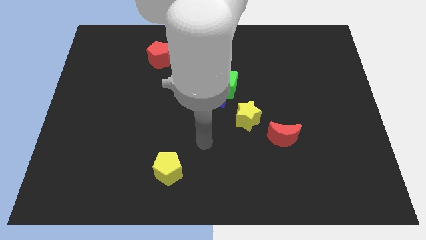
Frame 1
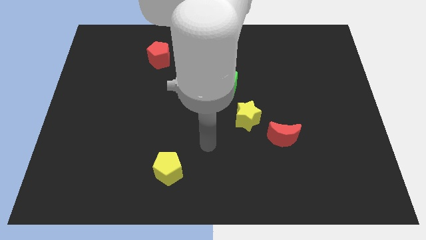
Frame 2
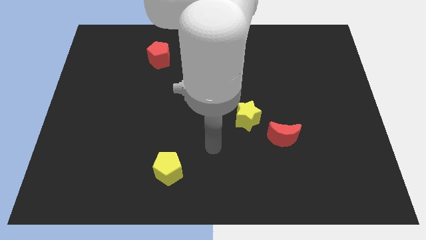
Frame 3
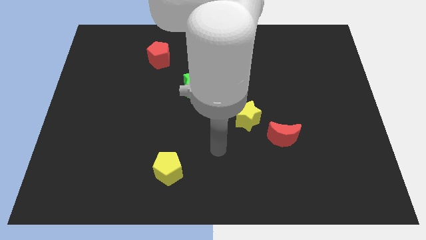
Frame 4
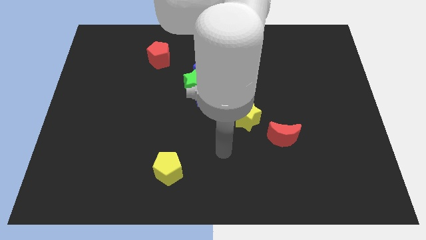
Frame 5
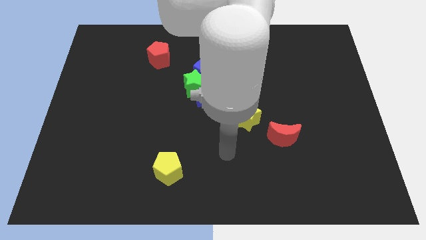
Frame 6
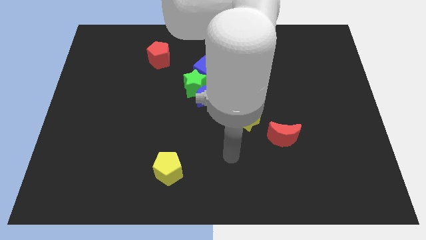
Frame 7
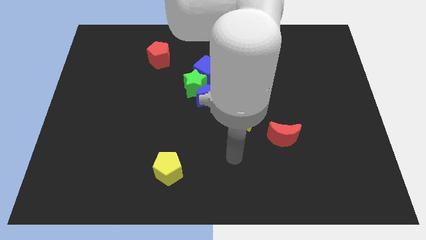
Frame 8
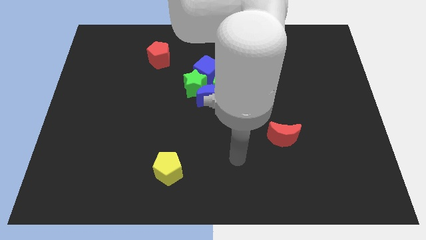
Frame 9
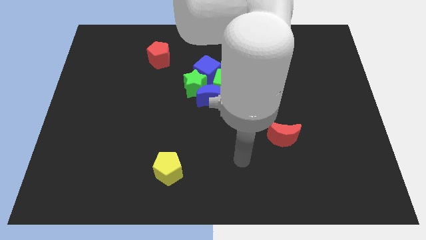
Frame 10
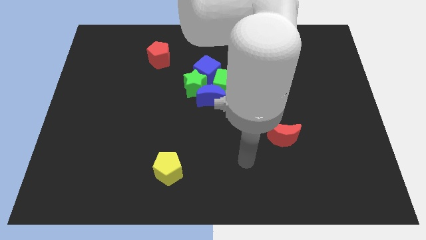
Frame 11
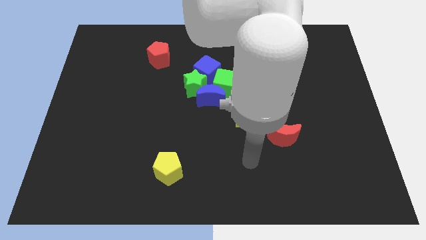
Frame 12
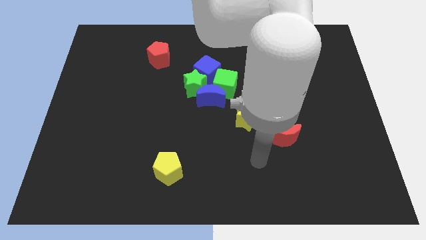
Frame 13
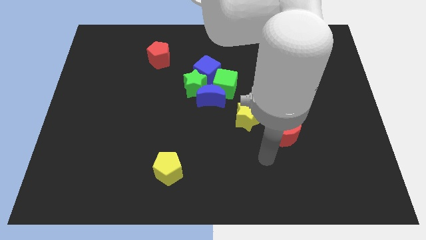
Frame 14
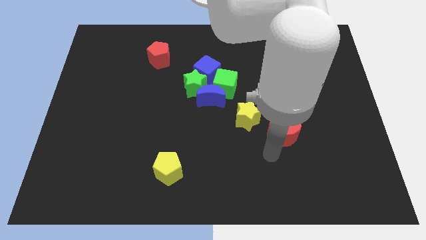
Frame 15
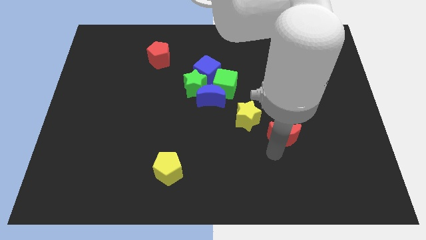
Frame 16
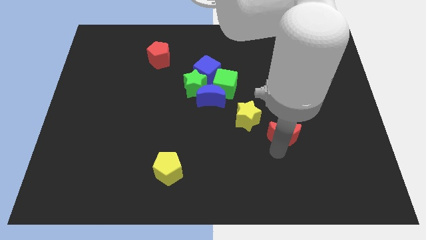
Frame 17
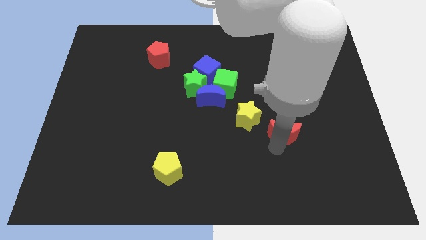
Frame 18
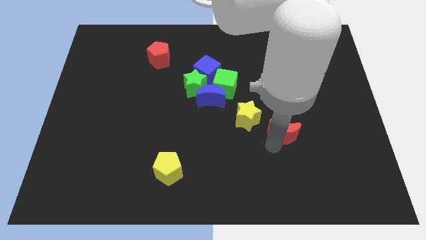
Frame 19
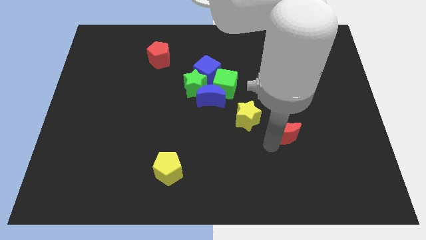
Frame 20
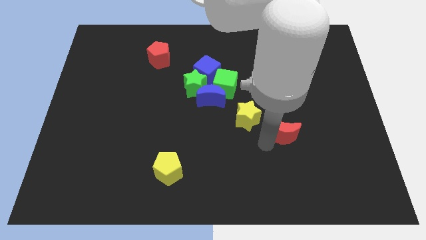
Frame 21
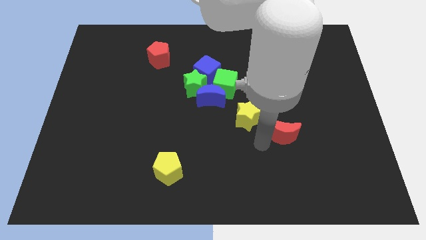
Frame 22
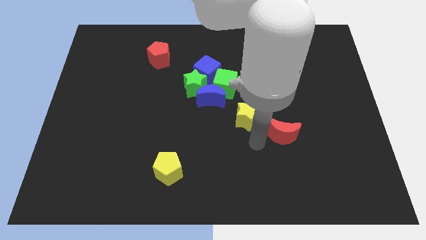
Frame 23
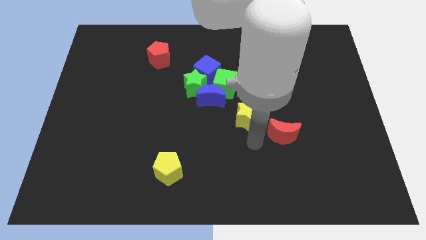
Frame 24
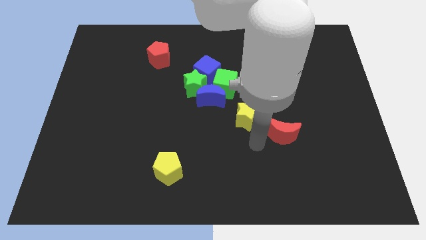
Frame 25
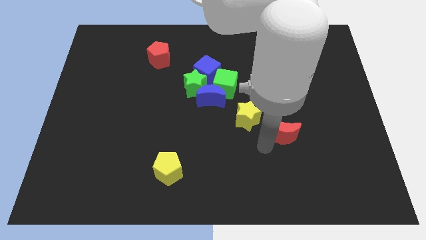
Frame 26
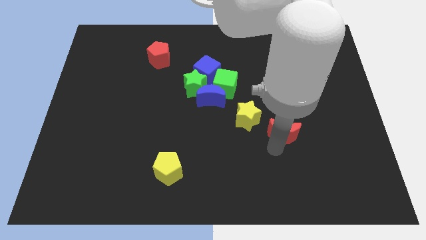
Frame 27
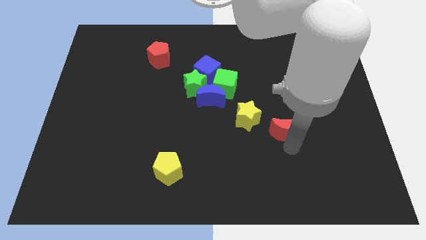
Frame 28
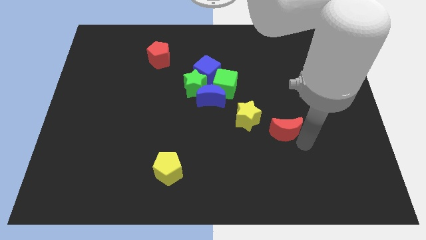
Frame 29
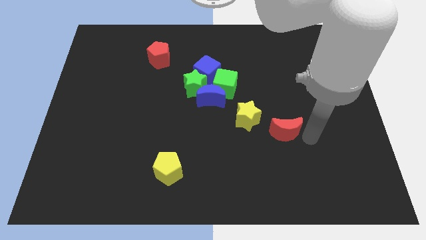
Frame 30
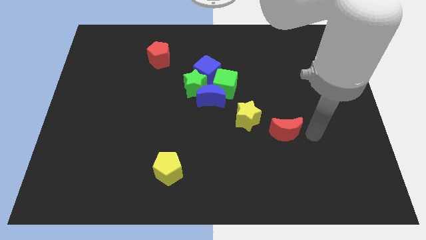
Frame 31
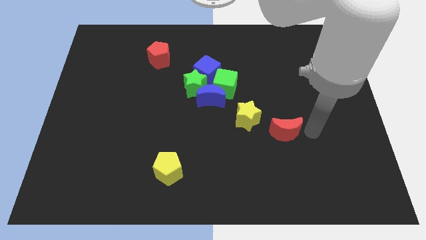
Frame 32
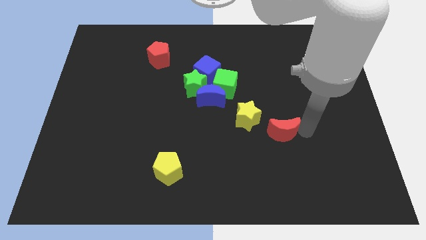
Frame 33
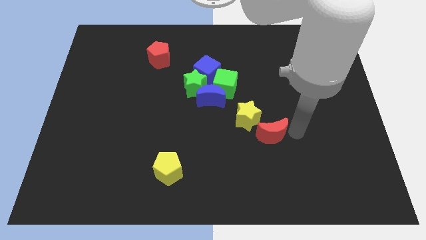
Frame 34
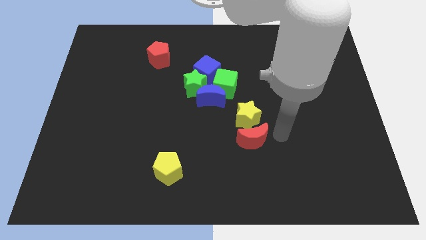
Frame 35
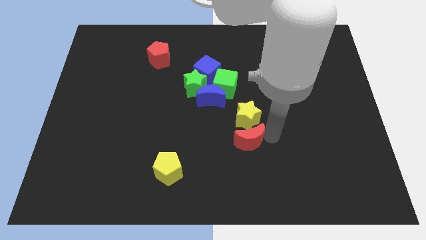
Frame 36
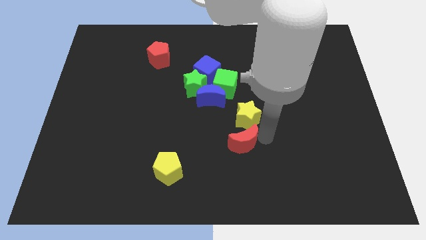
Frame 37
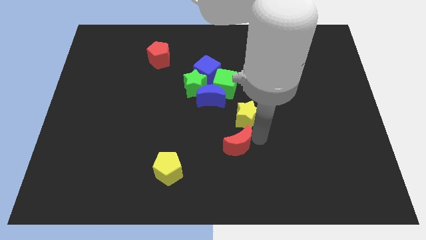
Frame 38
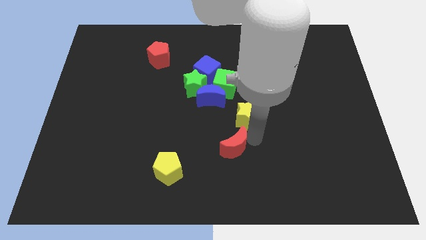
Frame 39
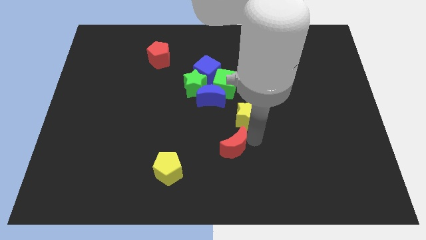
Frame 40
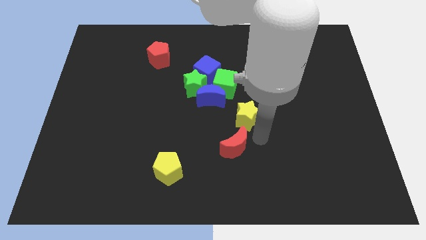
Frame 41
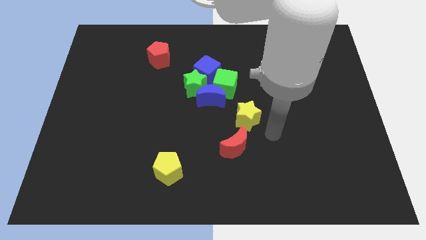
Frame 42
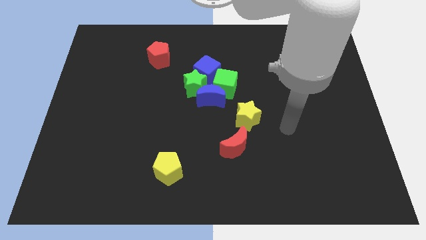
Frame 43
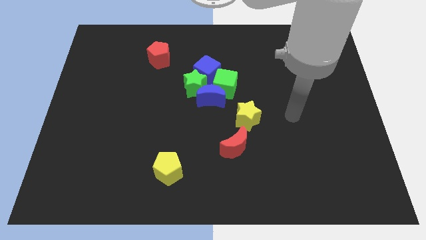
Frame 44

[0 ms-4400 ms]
place the red moon diagonally top right to the yellow pentagon

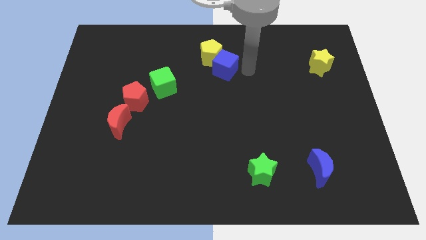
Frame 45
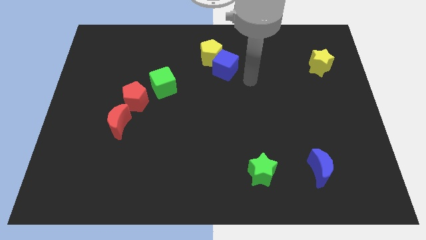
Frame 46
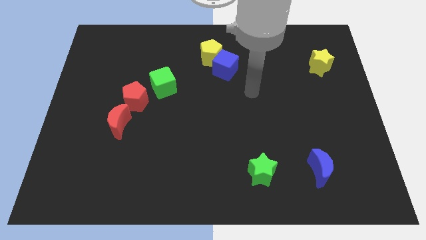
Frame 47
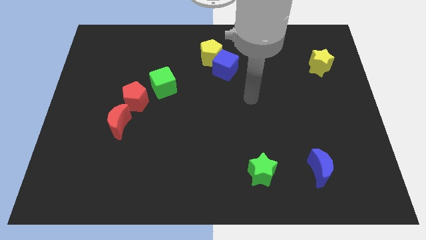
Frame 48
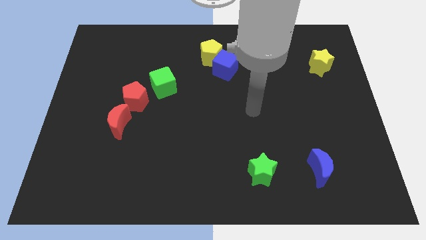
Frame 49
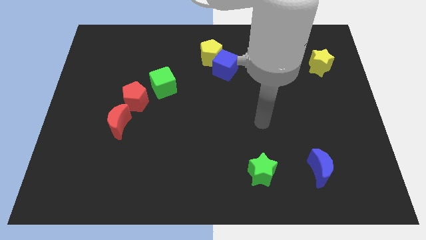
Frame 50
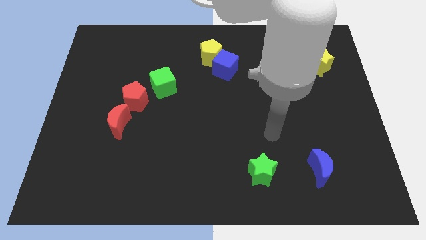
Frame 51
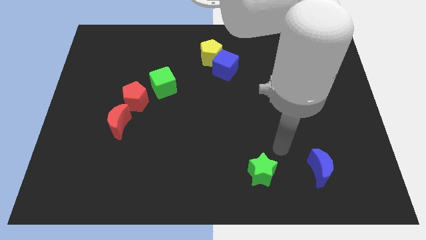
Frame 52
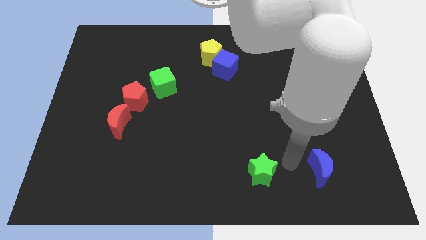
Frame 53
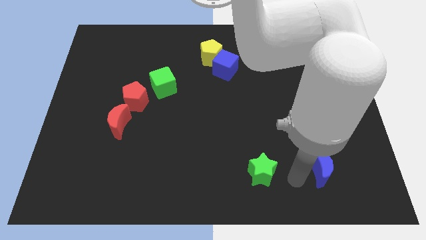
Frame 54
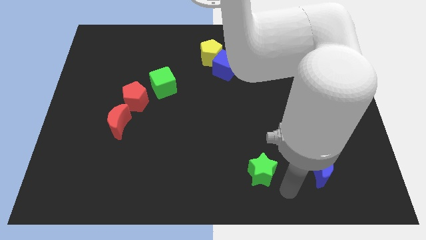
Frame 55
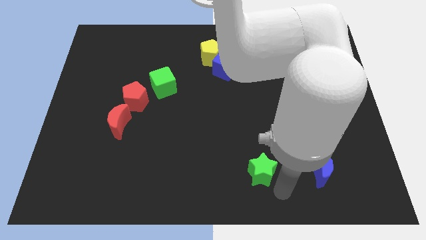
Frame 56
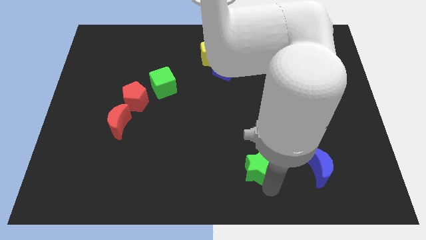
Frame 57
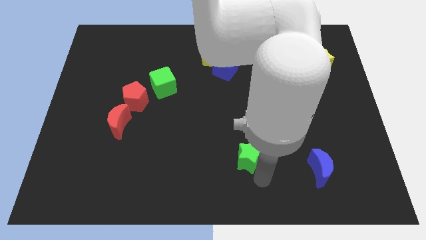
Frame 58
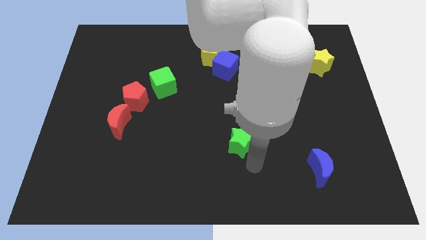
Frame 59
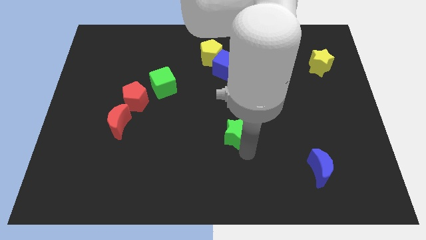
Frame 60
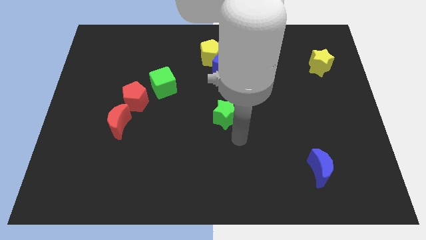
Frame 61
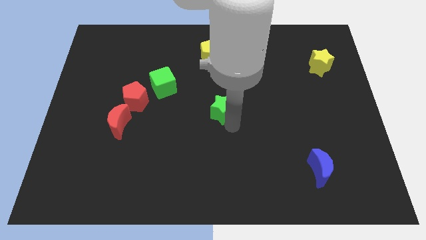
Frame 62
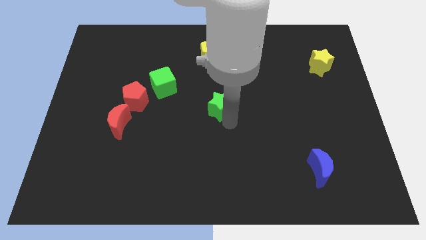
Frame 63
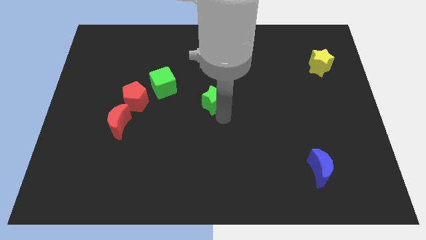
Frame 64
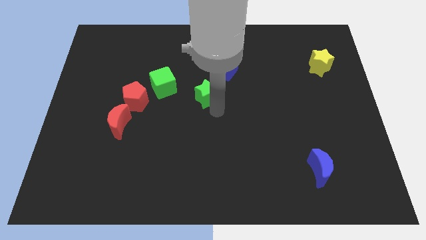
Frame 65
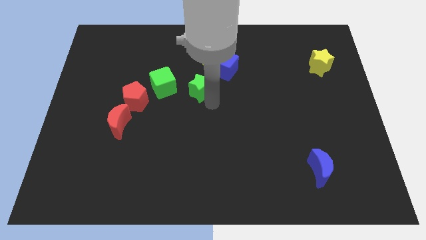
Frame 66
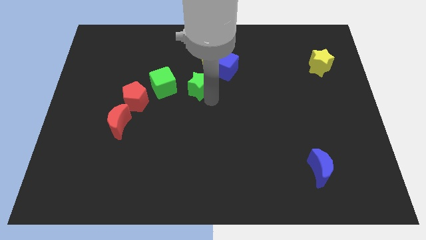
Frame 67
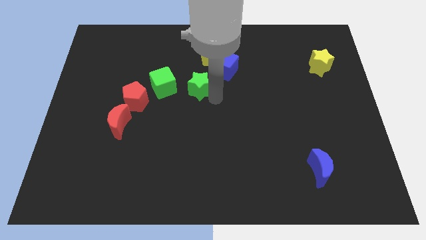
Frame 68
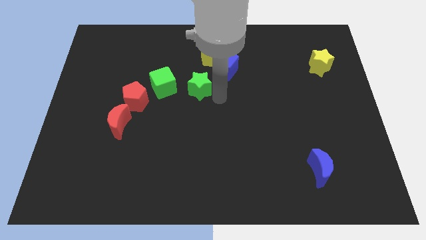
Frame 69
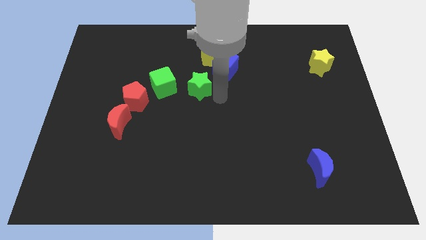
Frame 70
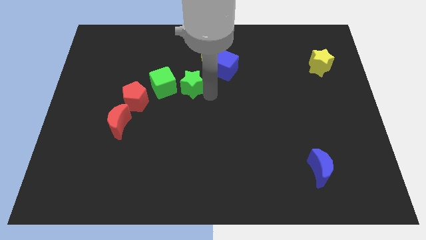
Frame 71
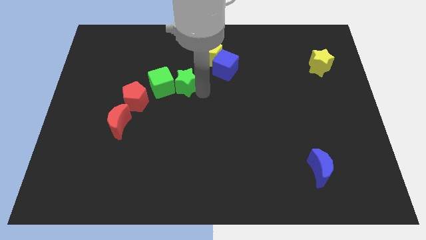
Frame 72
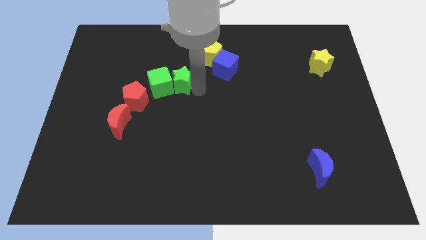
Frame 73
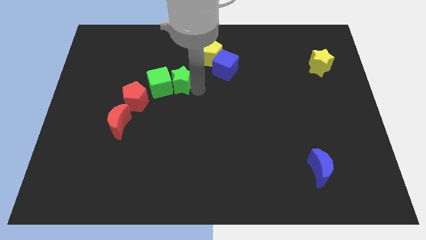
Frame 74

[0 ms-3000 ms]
drag the green star into the green cube

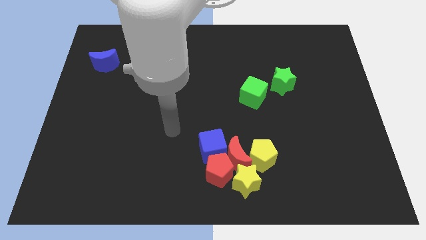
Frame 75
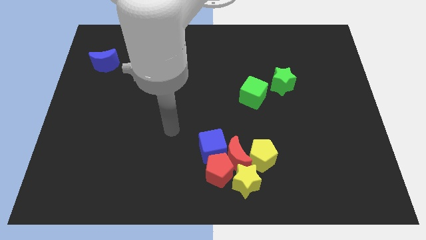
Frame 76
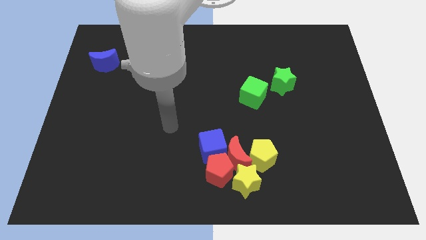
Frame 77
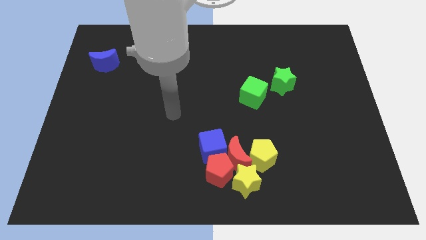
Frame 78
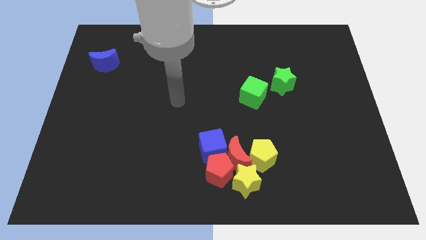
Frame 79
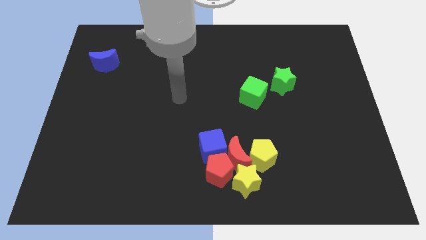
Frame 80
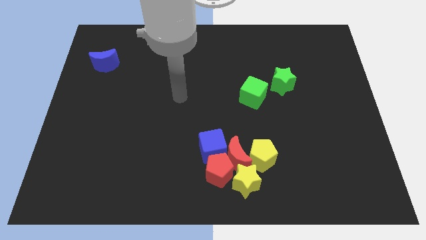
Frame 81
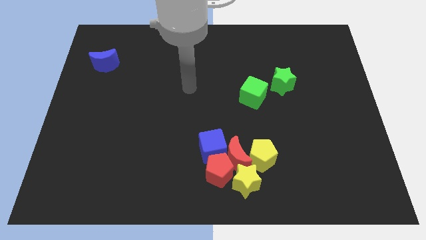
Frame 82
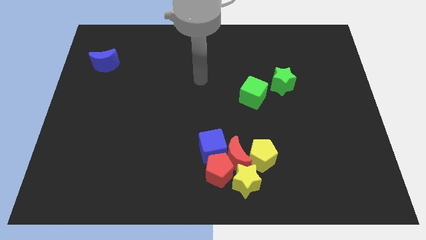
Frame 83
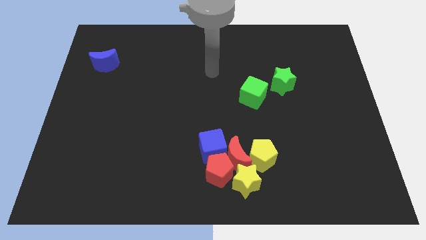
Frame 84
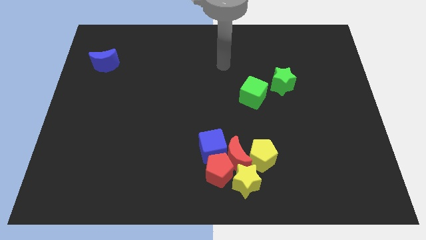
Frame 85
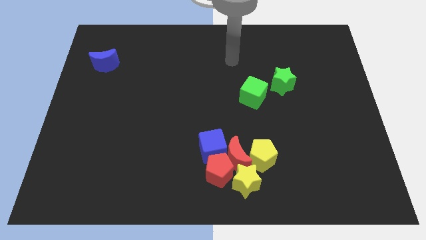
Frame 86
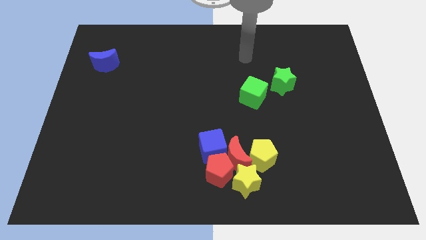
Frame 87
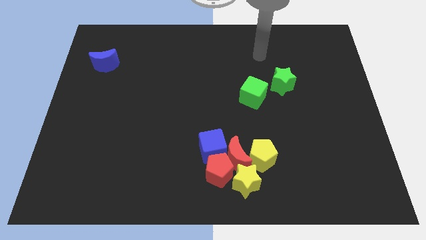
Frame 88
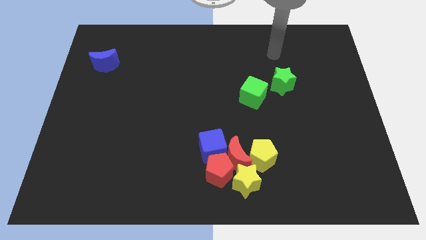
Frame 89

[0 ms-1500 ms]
move your arm towards the top of the green star

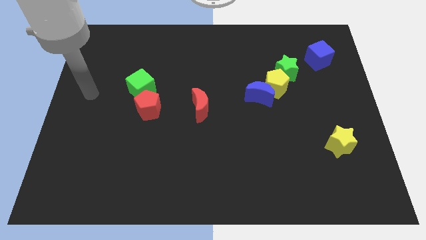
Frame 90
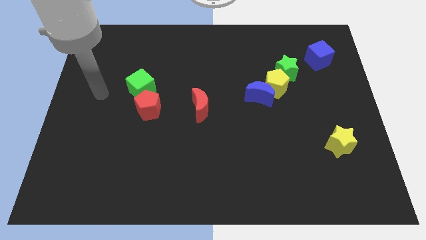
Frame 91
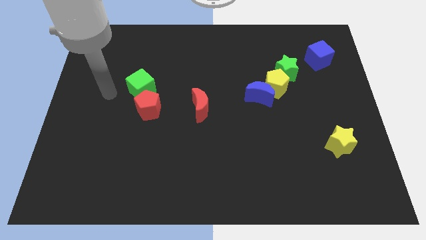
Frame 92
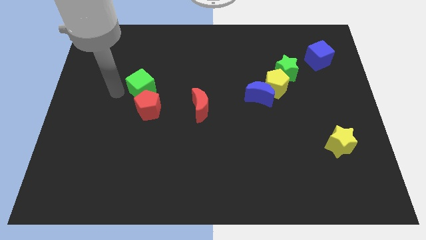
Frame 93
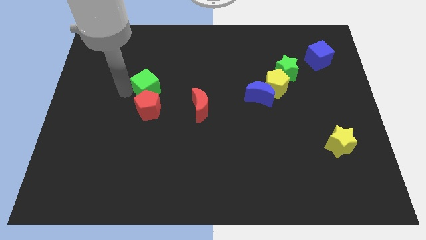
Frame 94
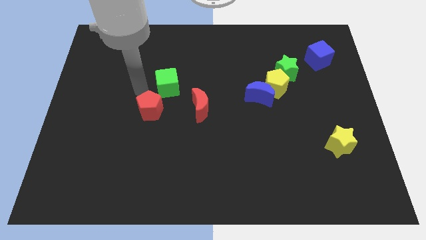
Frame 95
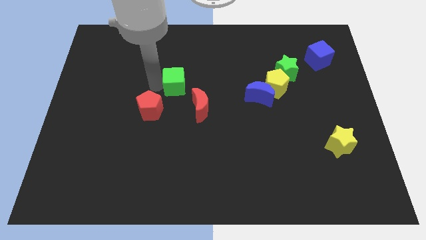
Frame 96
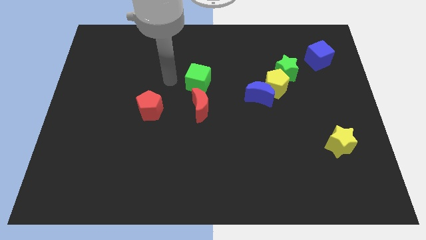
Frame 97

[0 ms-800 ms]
push the green cube to the top side of the red moon
